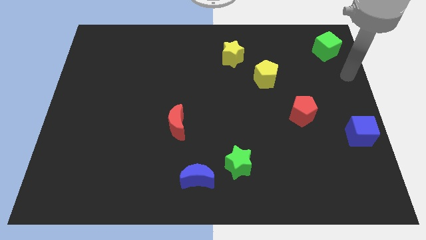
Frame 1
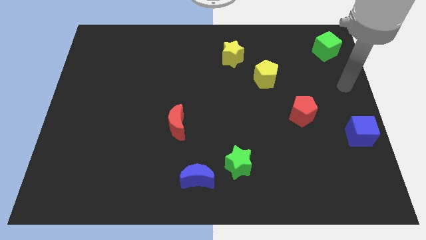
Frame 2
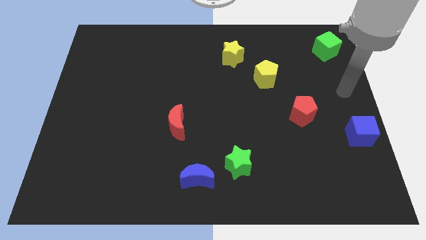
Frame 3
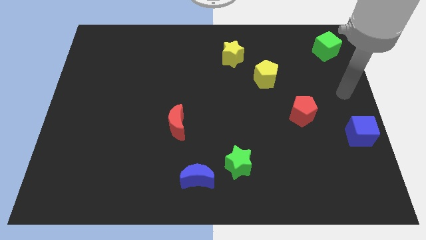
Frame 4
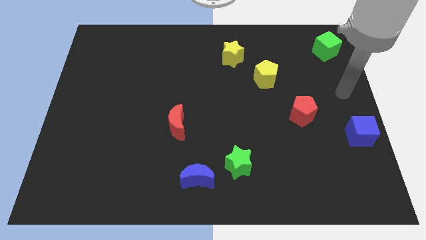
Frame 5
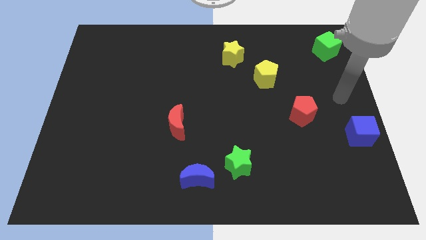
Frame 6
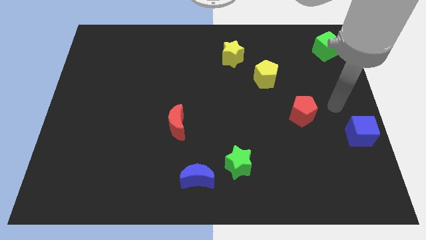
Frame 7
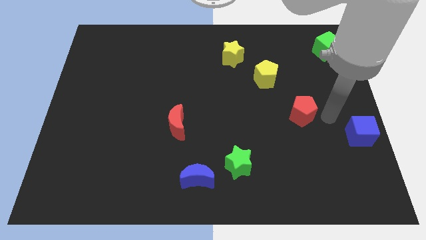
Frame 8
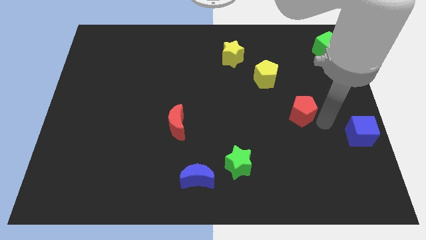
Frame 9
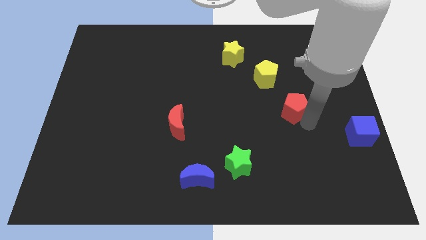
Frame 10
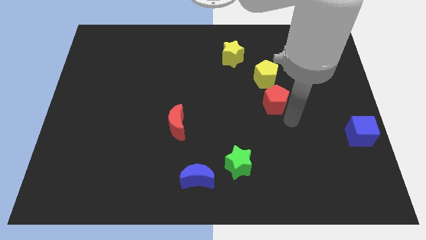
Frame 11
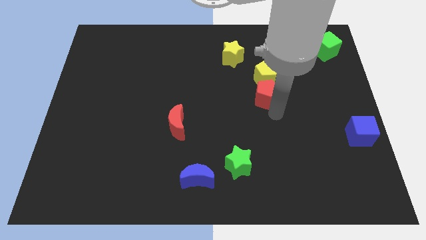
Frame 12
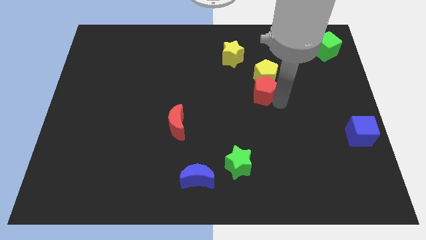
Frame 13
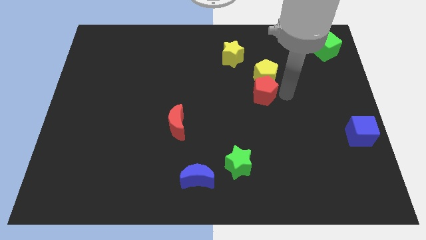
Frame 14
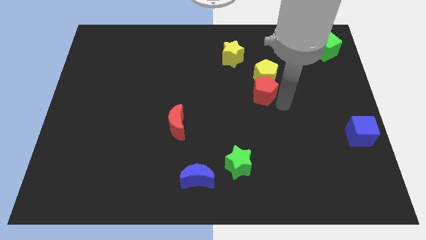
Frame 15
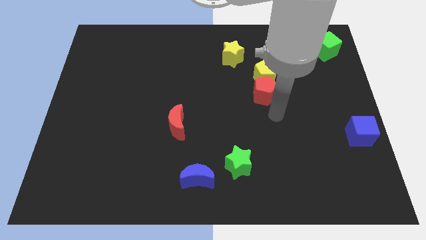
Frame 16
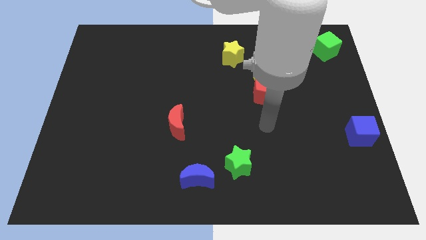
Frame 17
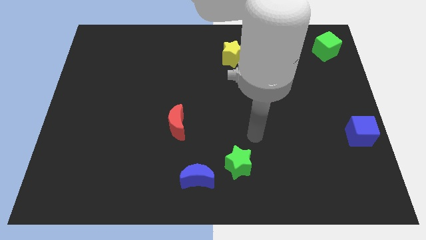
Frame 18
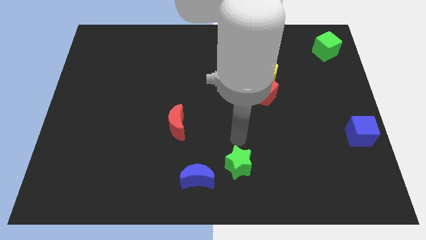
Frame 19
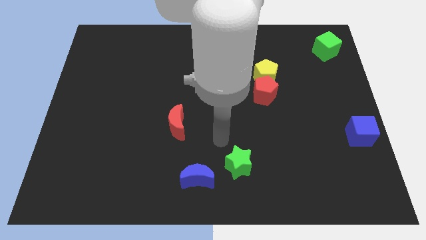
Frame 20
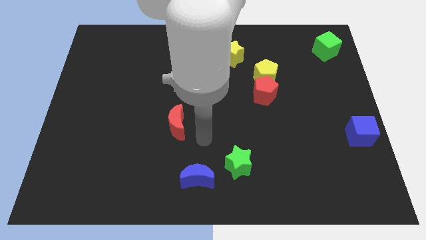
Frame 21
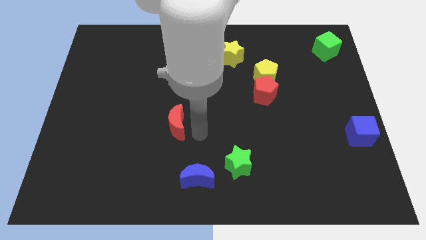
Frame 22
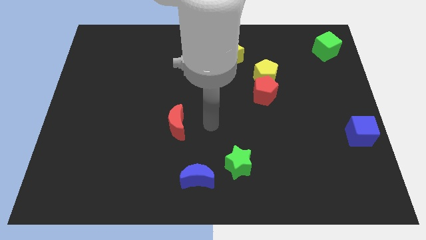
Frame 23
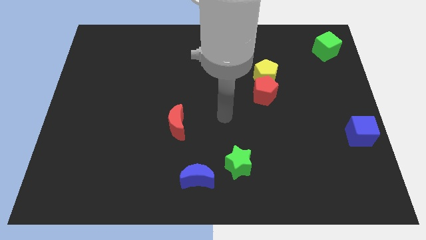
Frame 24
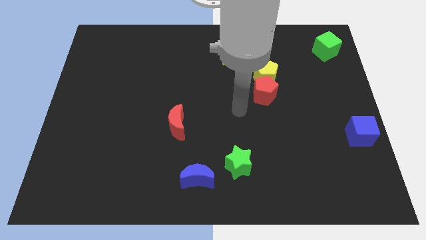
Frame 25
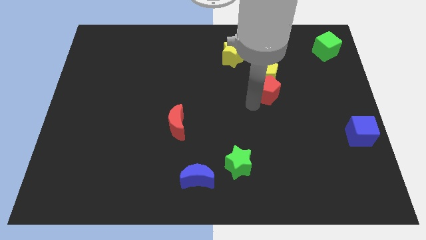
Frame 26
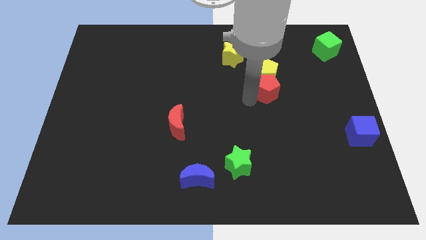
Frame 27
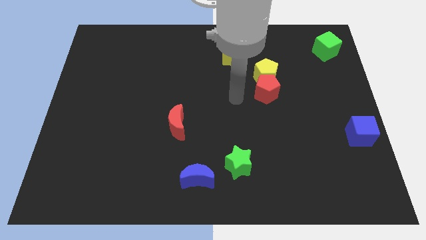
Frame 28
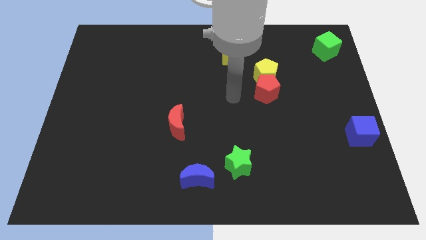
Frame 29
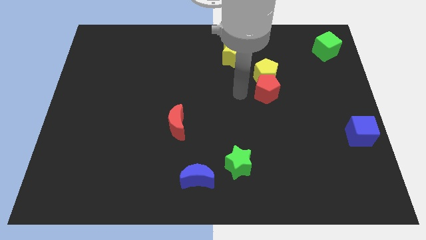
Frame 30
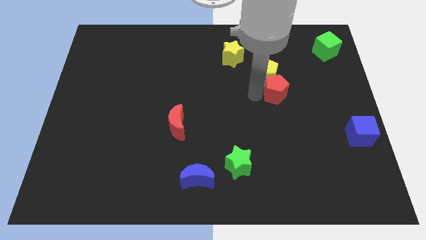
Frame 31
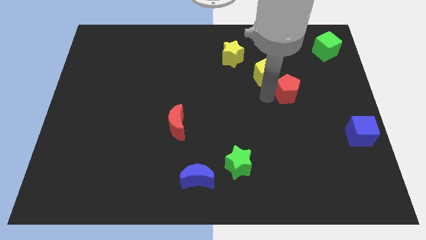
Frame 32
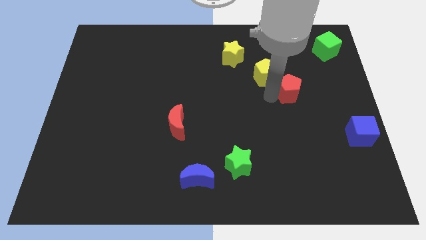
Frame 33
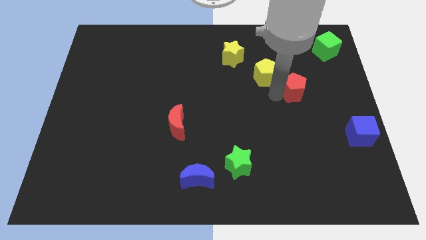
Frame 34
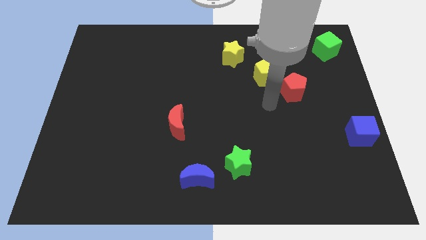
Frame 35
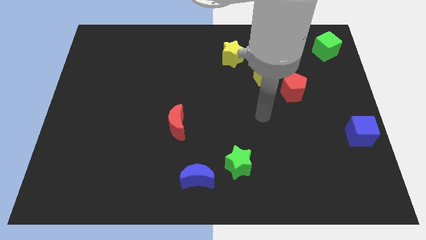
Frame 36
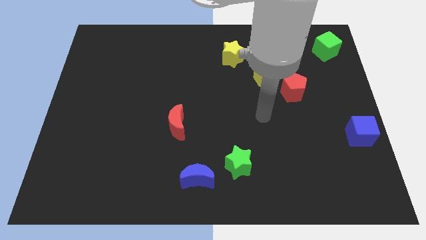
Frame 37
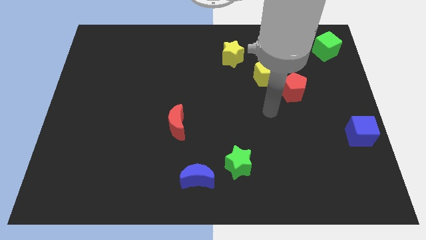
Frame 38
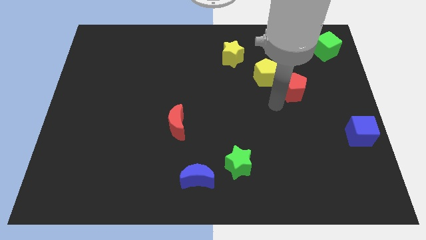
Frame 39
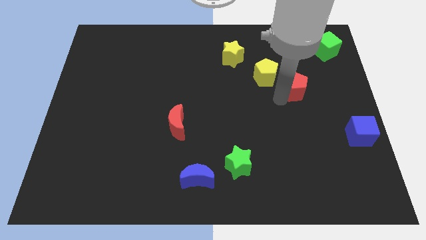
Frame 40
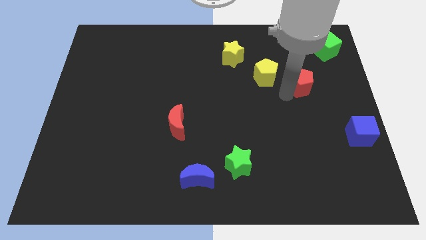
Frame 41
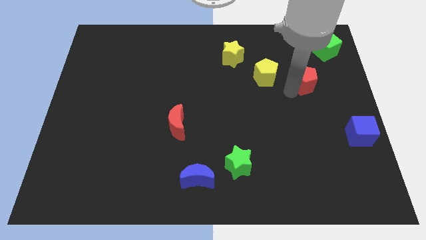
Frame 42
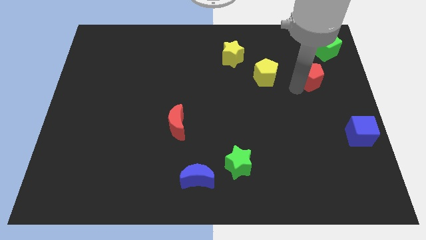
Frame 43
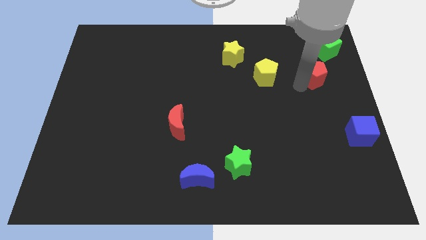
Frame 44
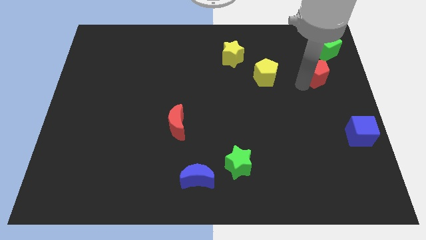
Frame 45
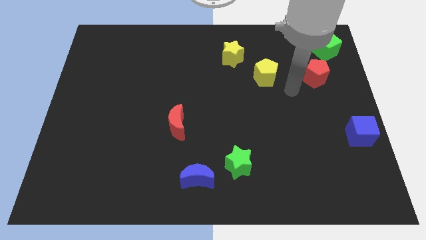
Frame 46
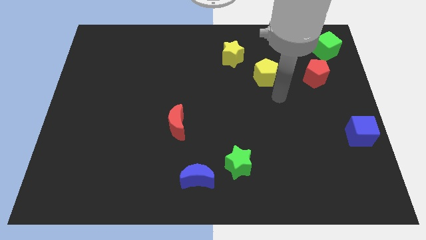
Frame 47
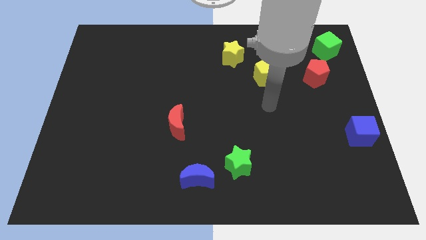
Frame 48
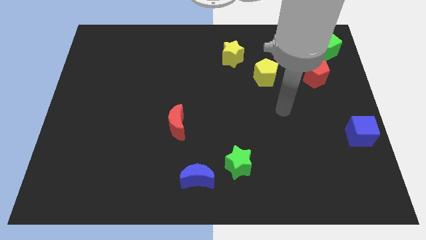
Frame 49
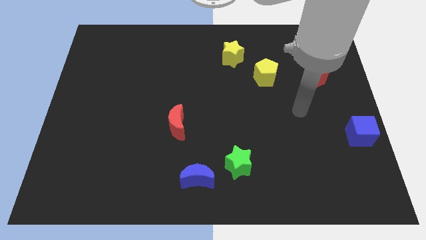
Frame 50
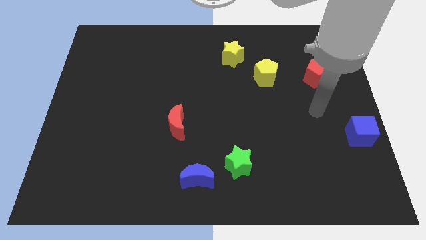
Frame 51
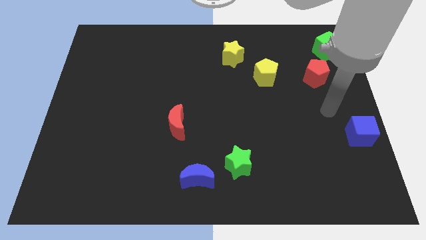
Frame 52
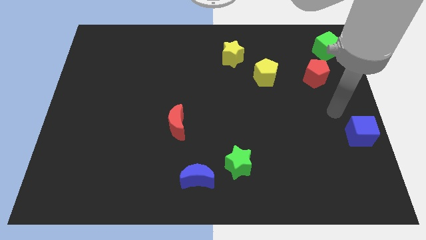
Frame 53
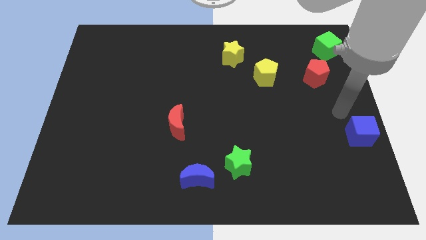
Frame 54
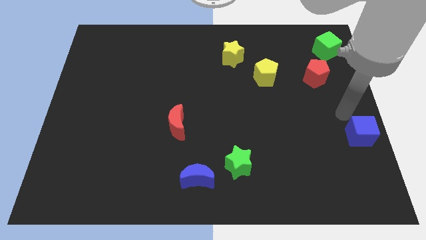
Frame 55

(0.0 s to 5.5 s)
move the red pentagon towards the green cube

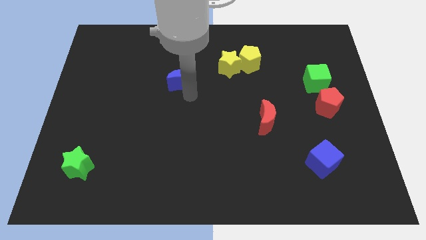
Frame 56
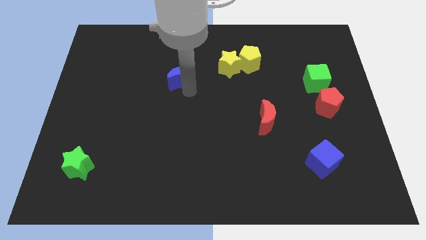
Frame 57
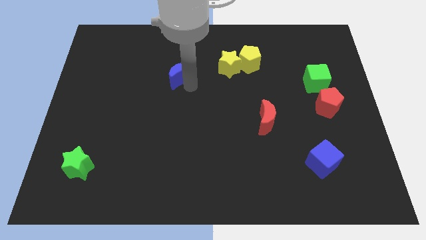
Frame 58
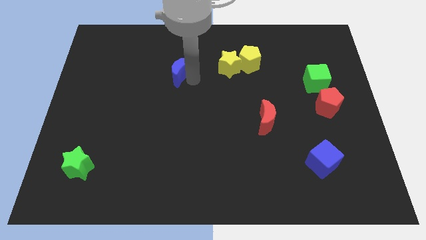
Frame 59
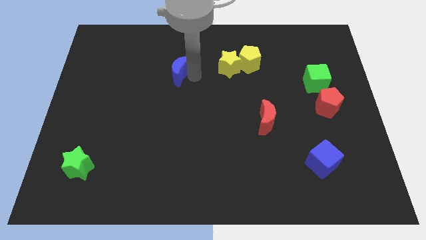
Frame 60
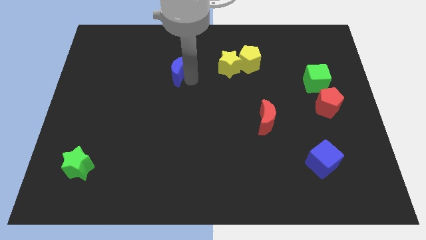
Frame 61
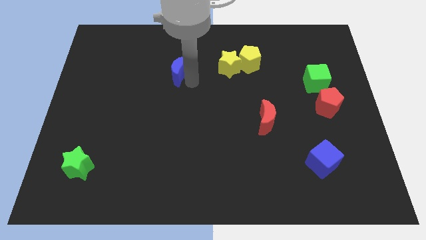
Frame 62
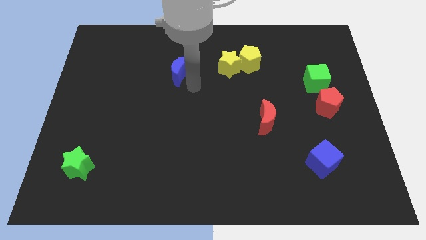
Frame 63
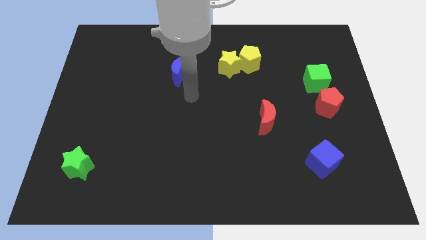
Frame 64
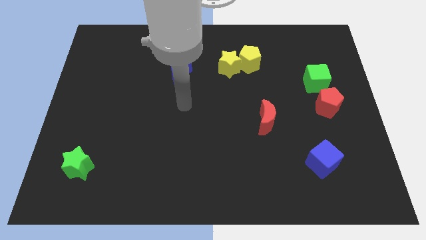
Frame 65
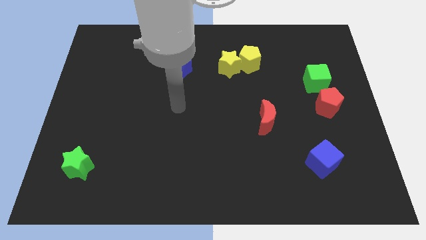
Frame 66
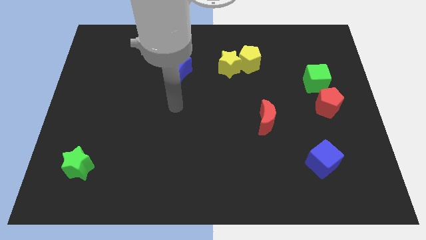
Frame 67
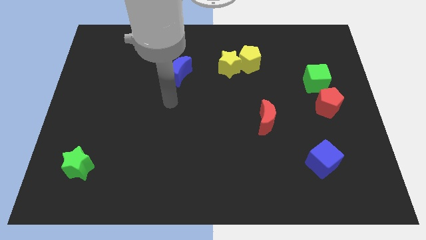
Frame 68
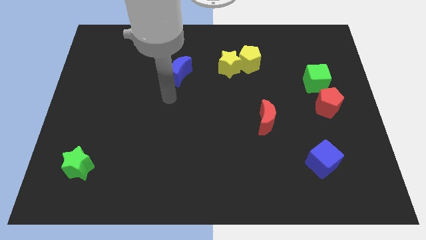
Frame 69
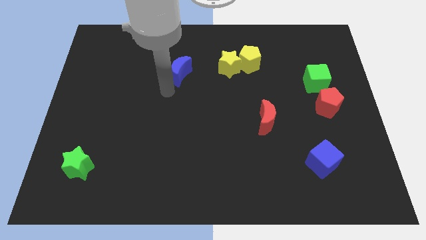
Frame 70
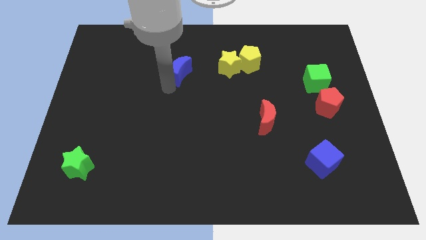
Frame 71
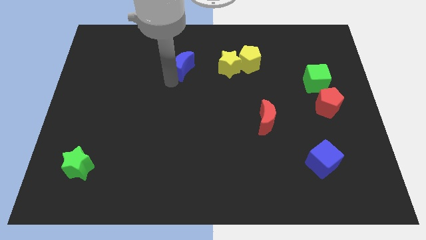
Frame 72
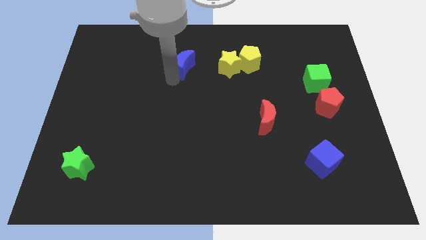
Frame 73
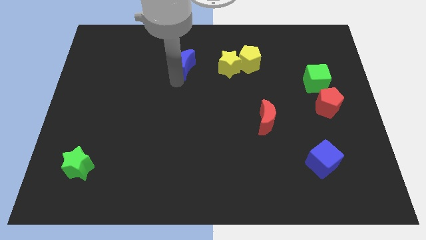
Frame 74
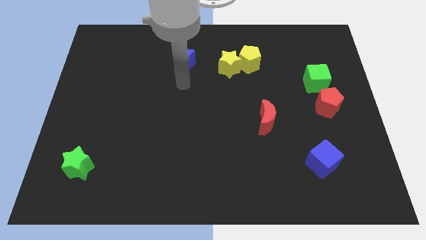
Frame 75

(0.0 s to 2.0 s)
push the blue crescent to the left of the yellow star

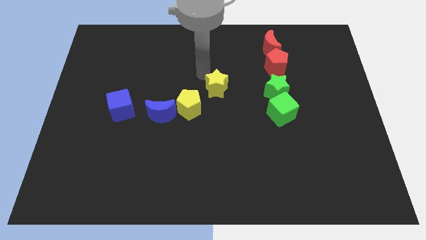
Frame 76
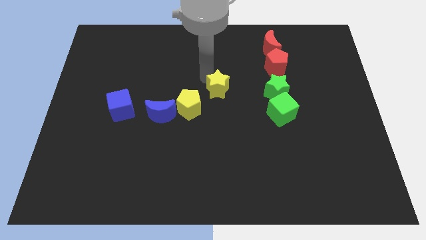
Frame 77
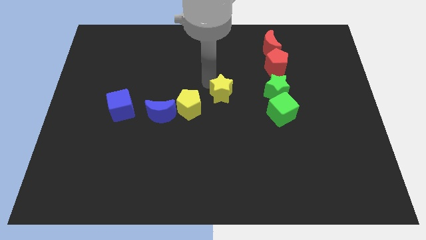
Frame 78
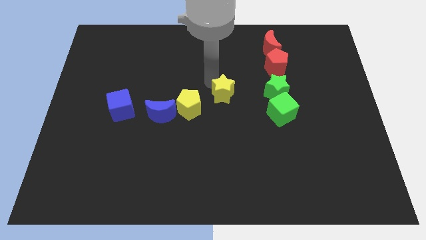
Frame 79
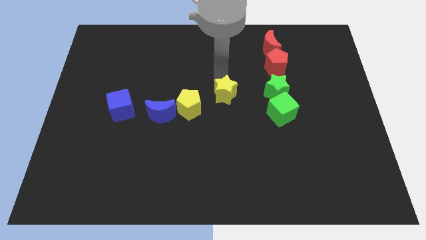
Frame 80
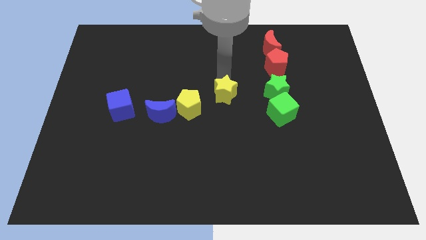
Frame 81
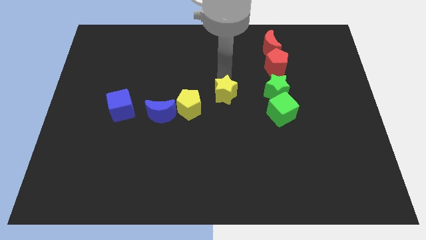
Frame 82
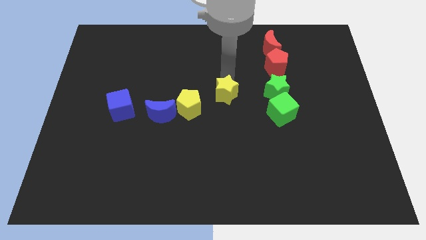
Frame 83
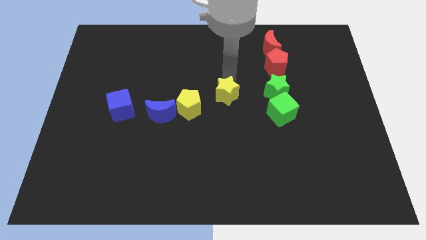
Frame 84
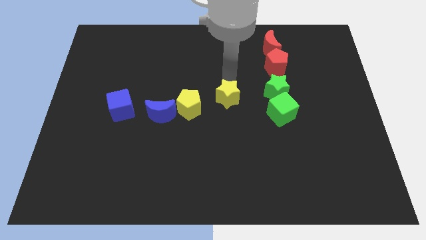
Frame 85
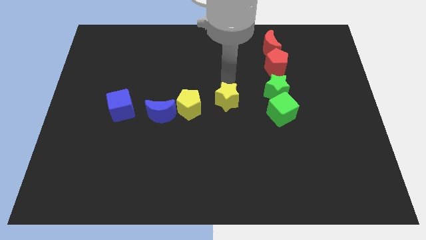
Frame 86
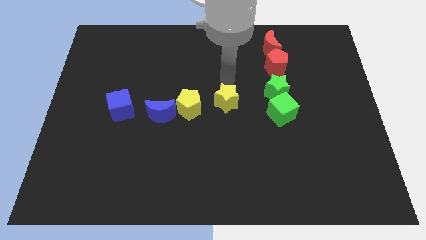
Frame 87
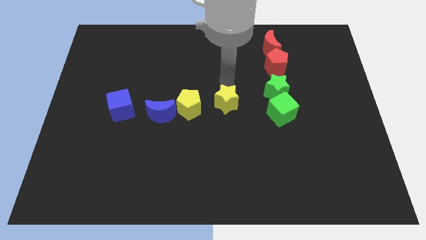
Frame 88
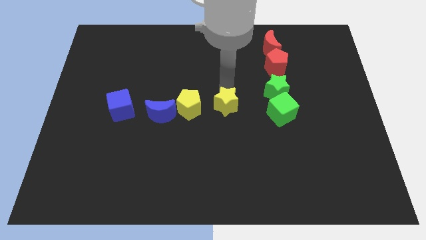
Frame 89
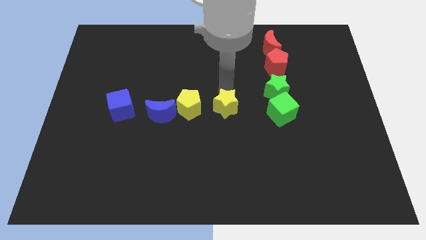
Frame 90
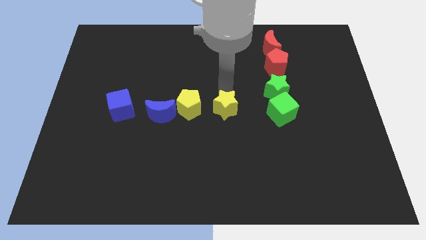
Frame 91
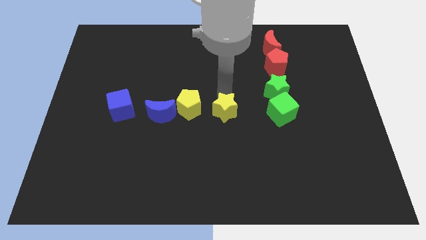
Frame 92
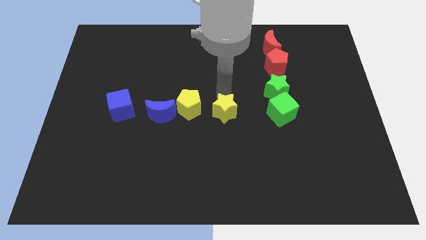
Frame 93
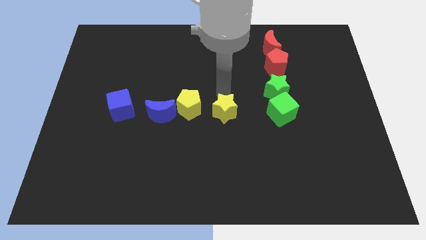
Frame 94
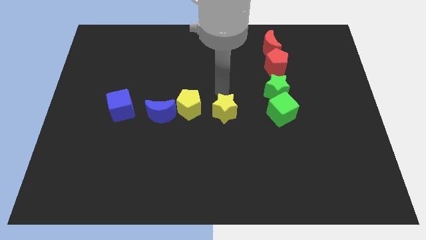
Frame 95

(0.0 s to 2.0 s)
push the yellow star to the right side of the yellow pentagon
